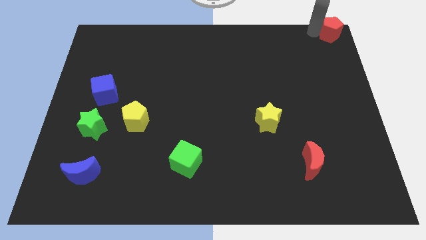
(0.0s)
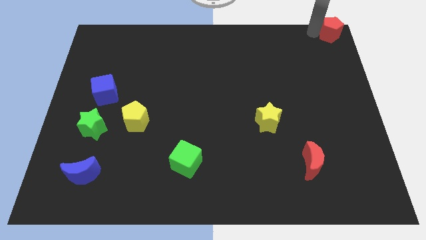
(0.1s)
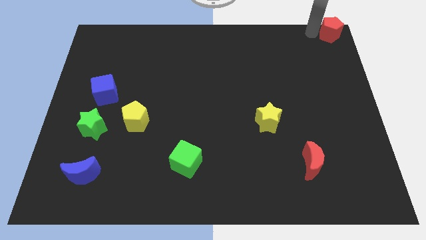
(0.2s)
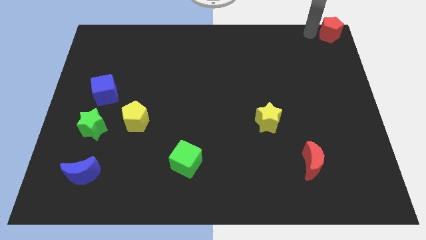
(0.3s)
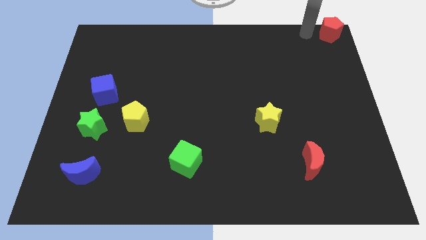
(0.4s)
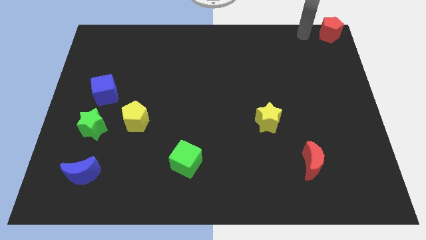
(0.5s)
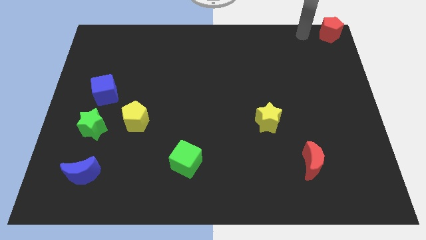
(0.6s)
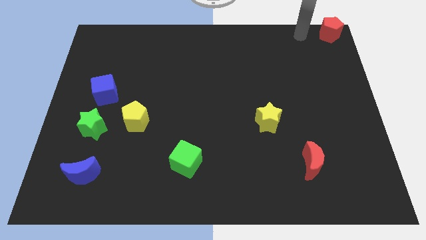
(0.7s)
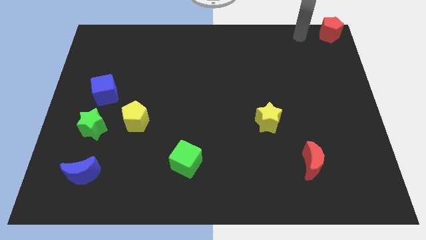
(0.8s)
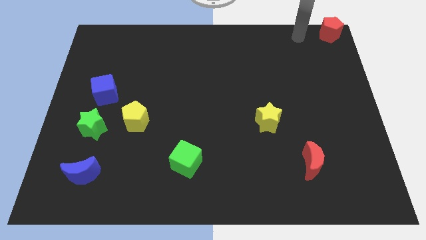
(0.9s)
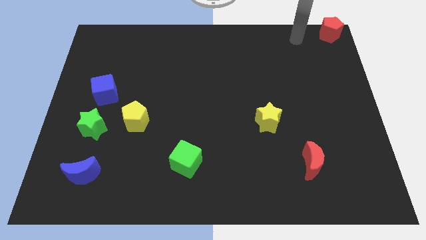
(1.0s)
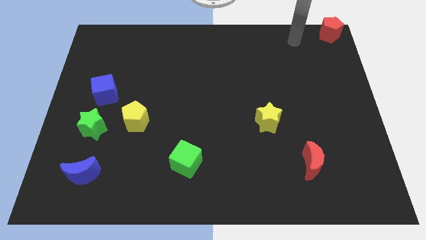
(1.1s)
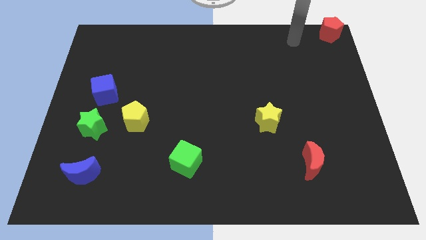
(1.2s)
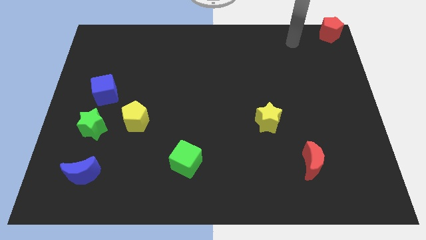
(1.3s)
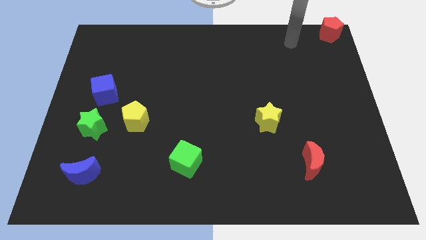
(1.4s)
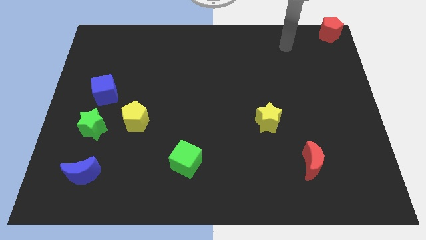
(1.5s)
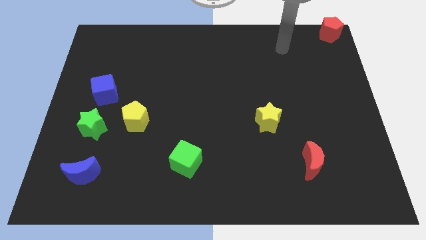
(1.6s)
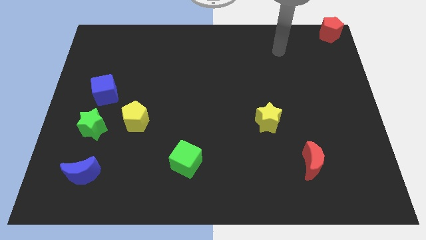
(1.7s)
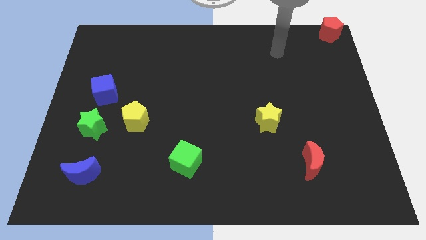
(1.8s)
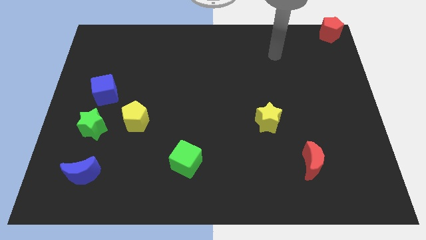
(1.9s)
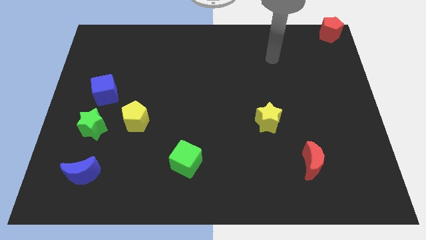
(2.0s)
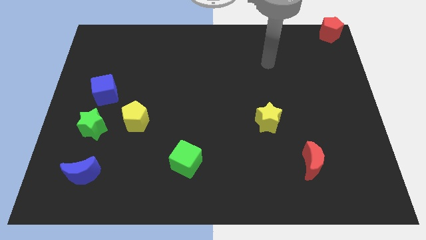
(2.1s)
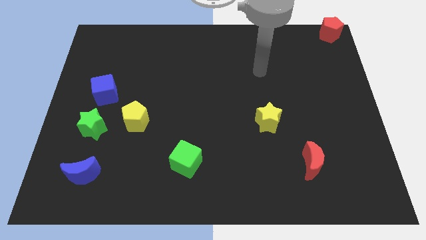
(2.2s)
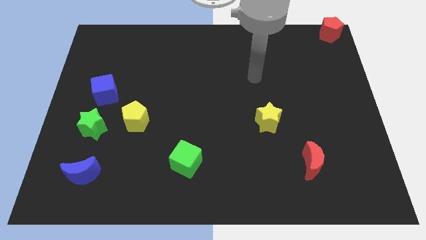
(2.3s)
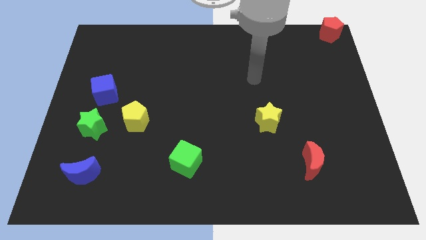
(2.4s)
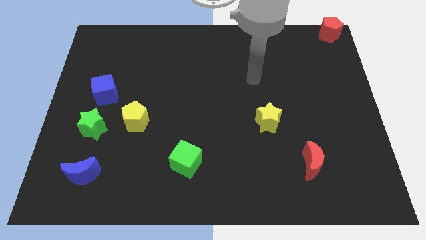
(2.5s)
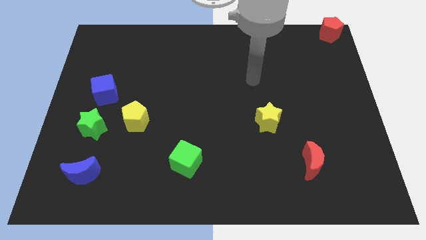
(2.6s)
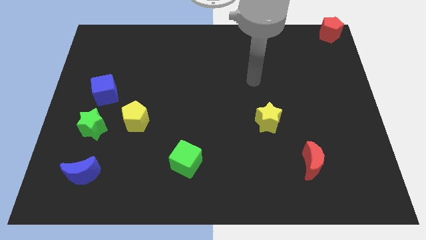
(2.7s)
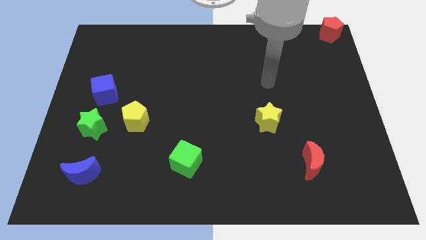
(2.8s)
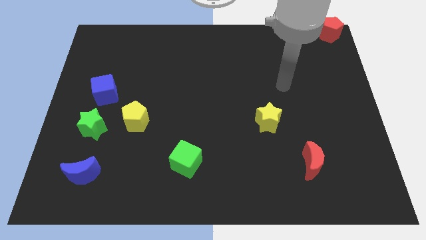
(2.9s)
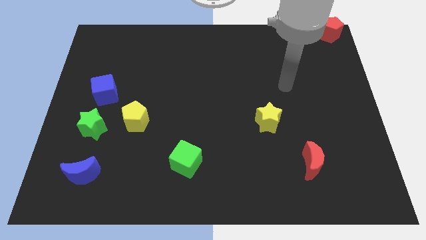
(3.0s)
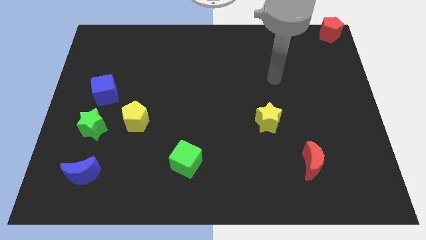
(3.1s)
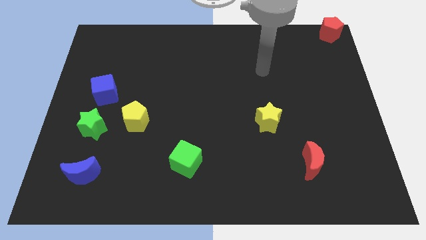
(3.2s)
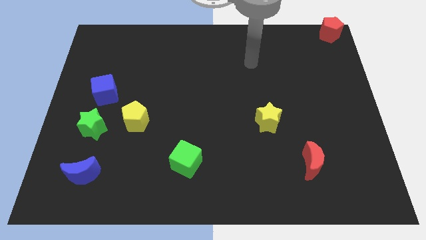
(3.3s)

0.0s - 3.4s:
move the arm away from the red pentagon

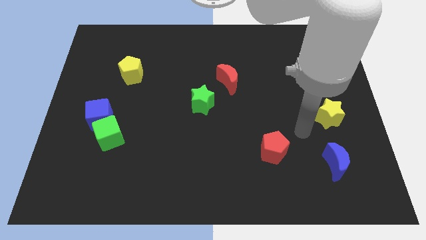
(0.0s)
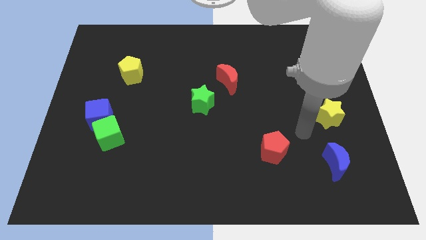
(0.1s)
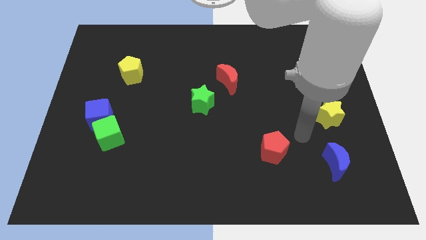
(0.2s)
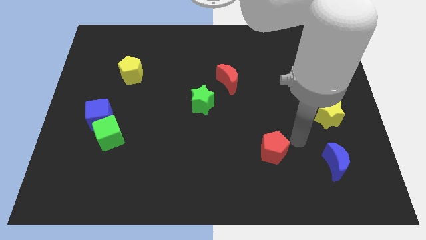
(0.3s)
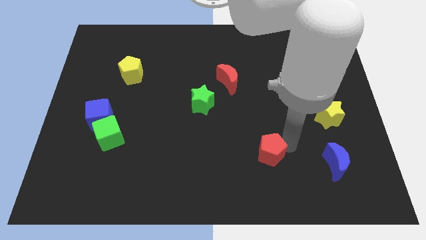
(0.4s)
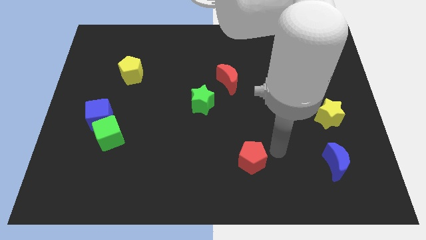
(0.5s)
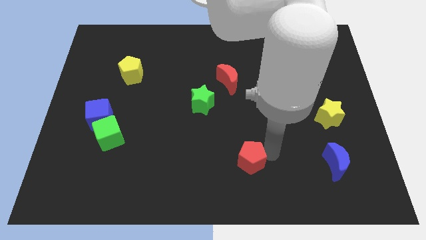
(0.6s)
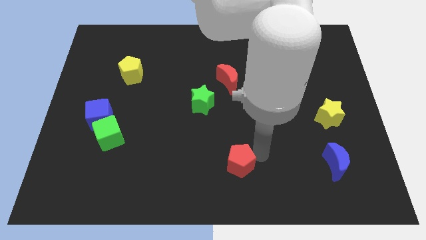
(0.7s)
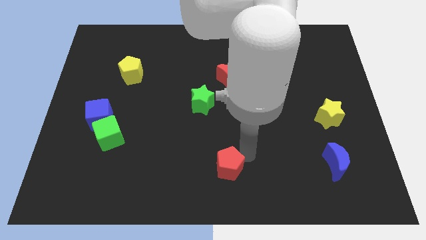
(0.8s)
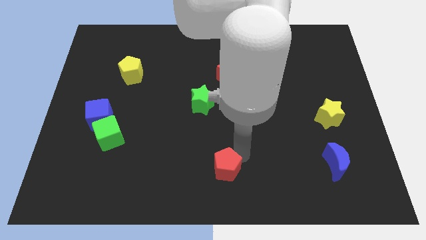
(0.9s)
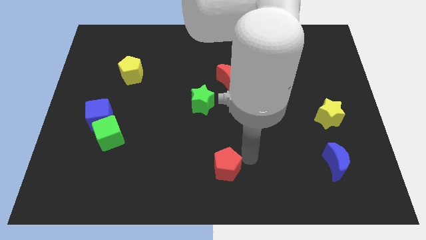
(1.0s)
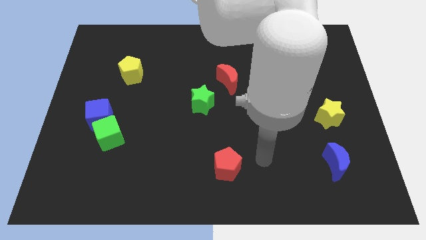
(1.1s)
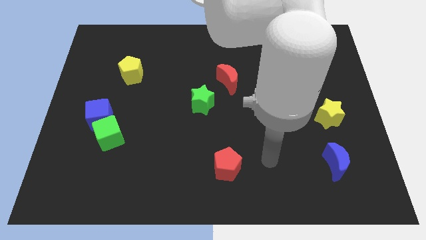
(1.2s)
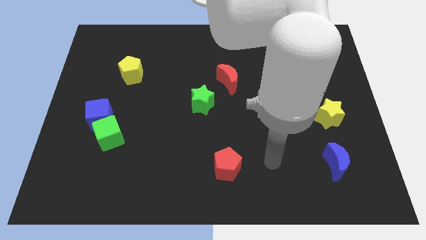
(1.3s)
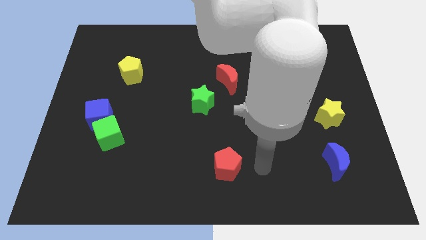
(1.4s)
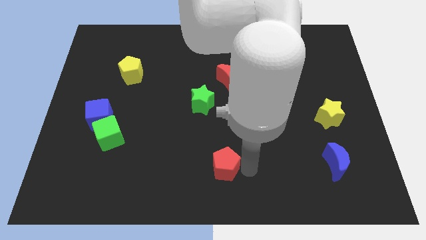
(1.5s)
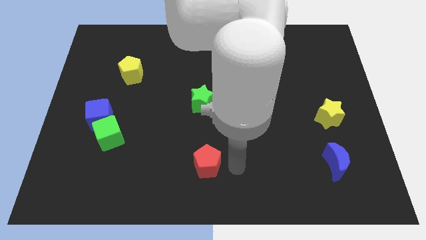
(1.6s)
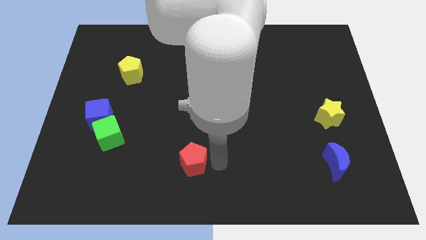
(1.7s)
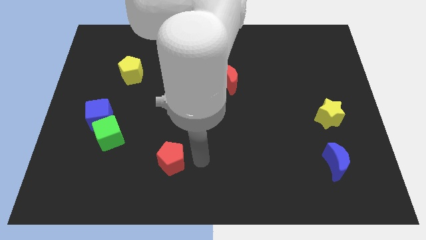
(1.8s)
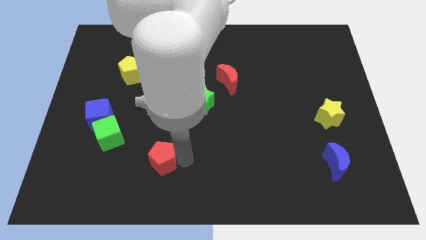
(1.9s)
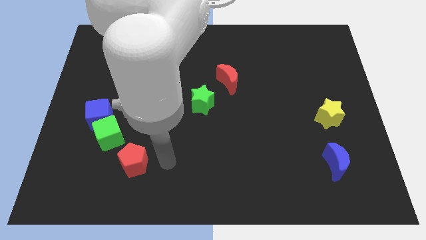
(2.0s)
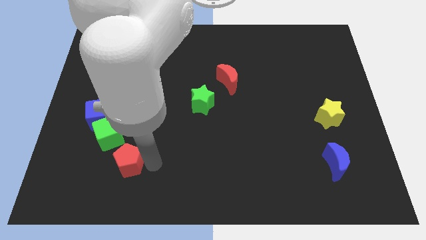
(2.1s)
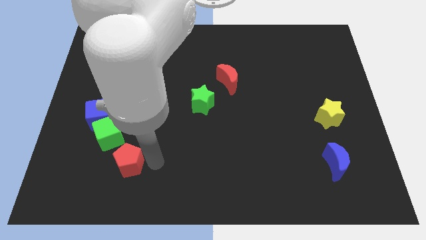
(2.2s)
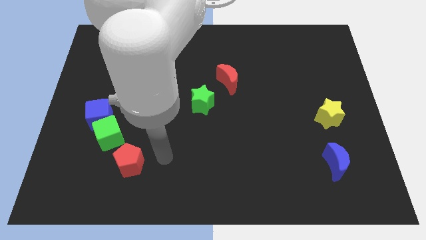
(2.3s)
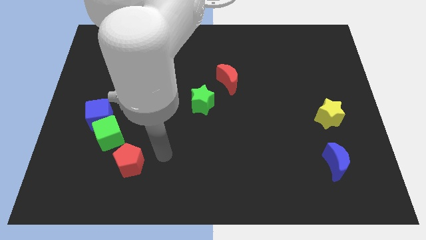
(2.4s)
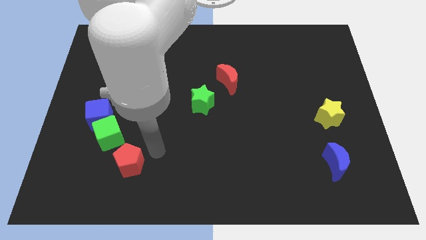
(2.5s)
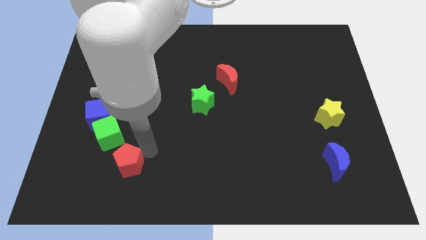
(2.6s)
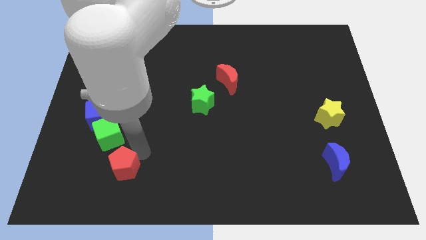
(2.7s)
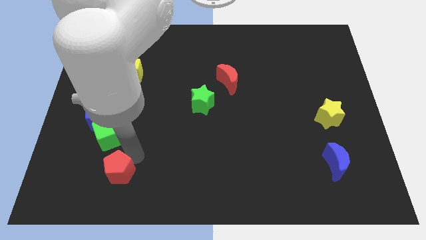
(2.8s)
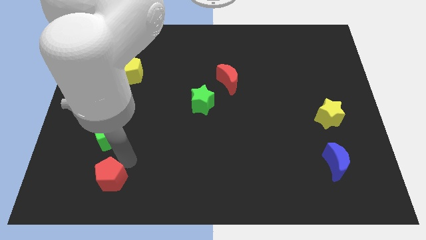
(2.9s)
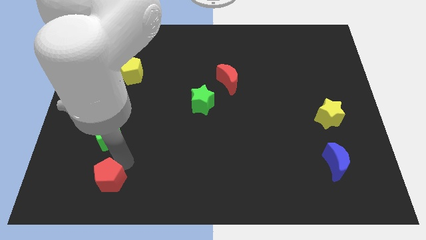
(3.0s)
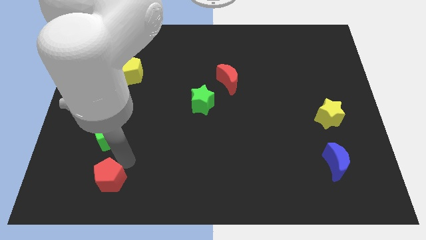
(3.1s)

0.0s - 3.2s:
place the red pentagon below the green cube

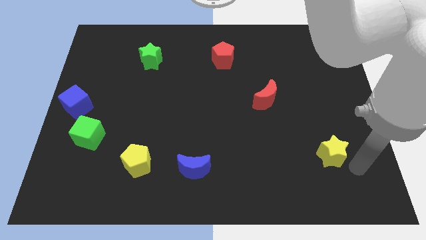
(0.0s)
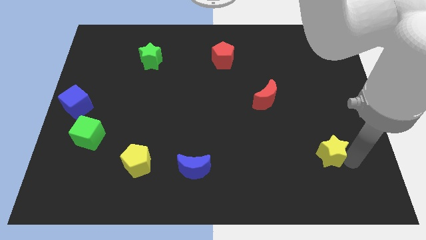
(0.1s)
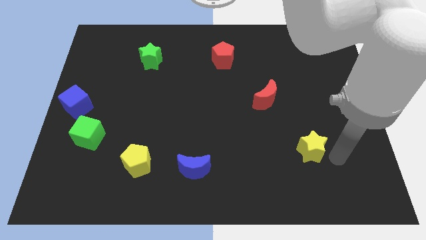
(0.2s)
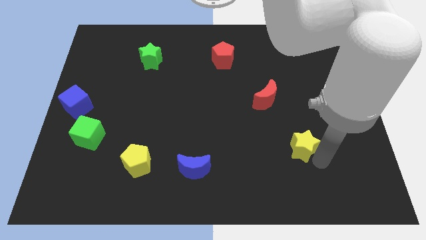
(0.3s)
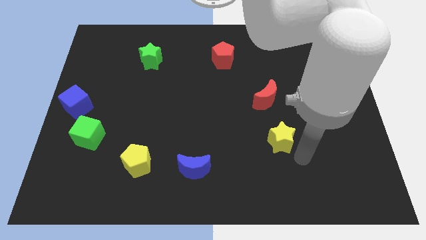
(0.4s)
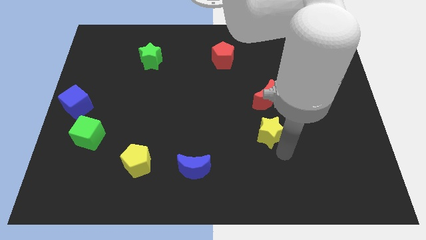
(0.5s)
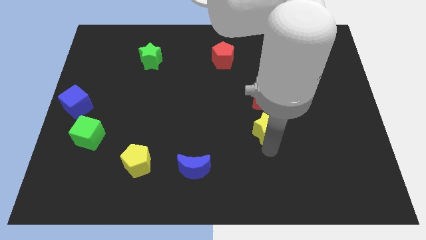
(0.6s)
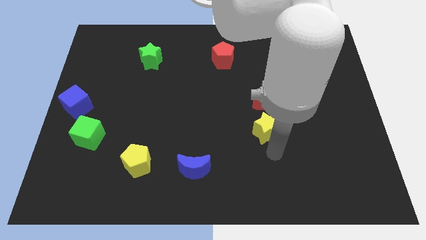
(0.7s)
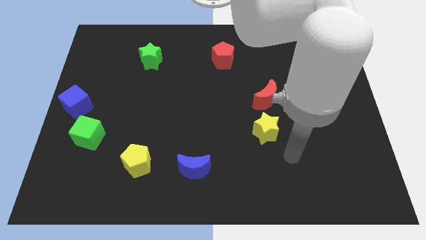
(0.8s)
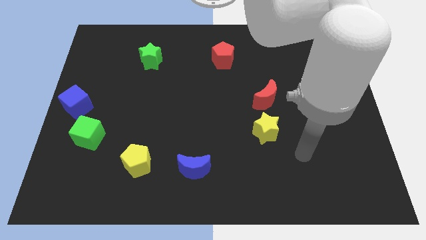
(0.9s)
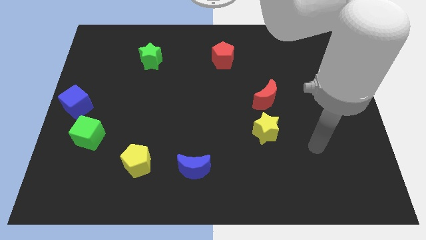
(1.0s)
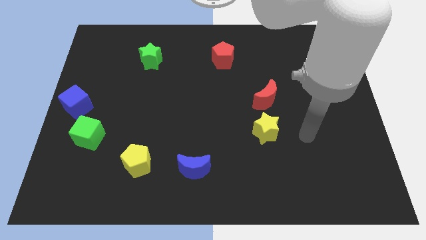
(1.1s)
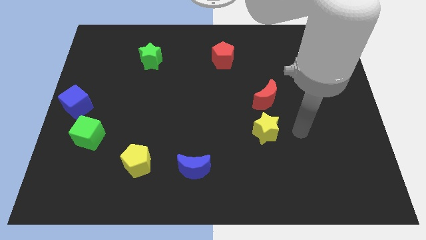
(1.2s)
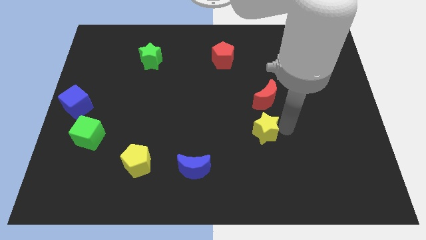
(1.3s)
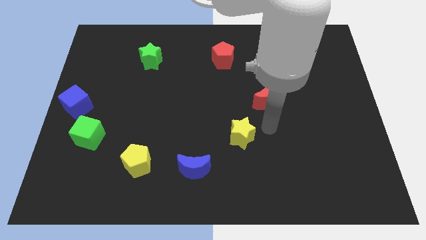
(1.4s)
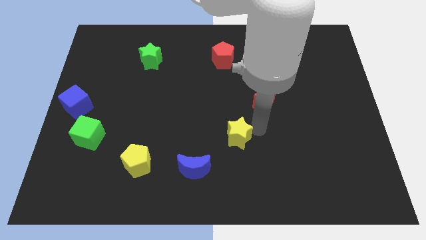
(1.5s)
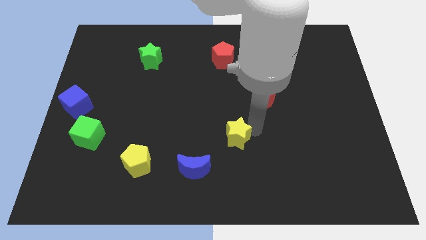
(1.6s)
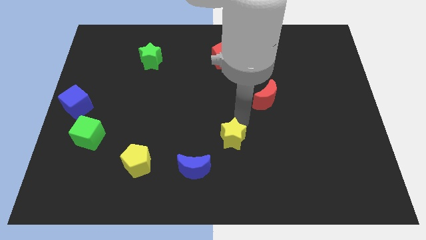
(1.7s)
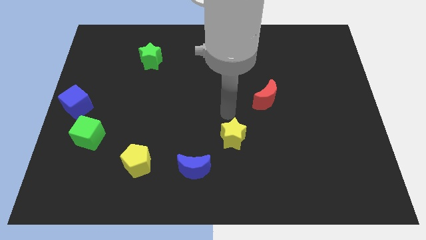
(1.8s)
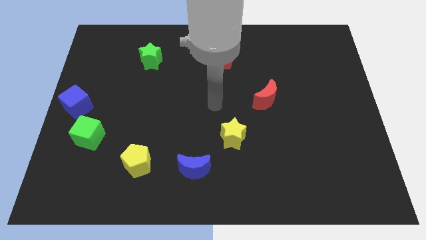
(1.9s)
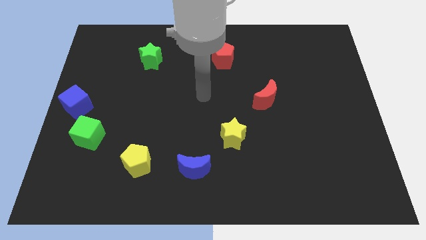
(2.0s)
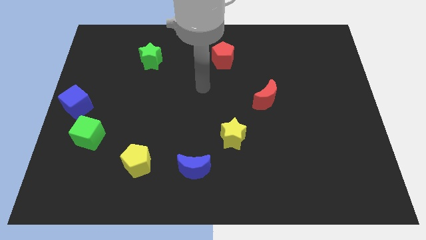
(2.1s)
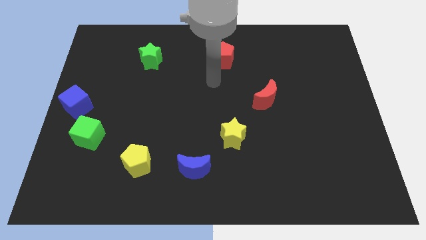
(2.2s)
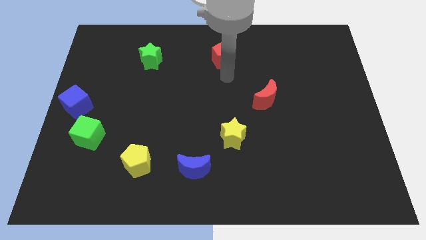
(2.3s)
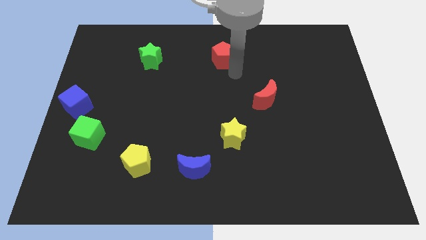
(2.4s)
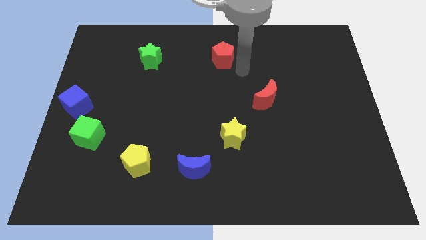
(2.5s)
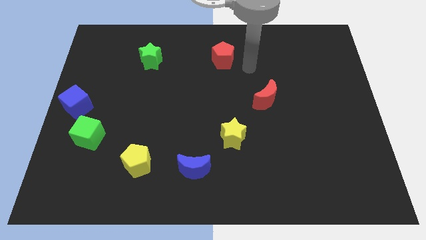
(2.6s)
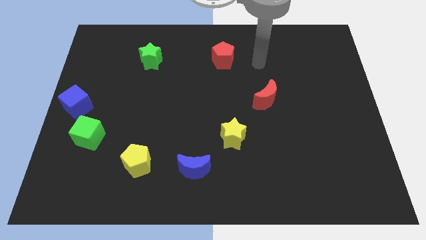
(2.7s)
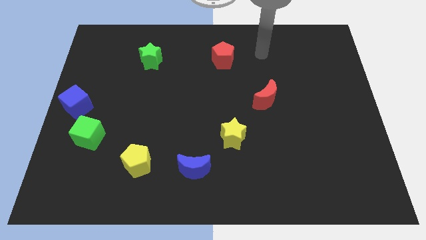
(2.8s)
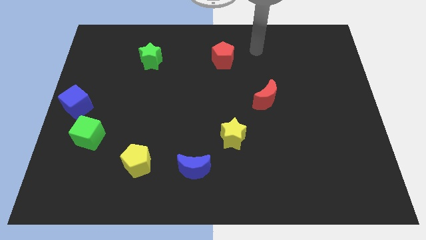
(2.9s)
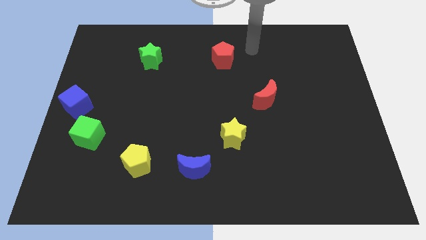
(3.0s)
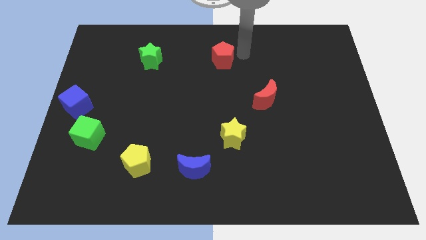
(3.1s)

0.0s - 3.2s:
put the yellow star diagonally in between both the crescents
